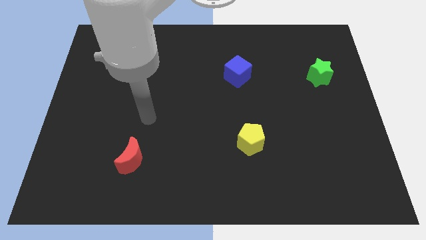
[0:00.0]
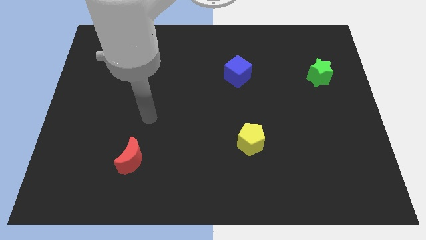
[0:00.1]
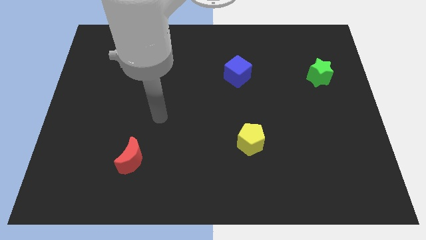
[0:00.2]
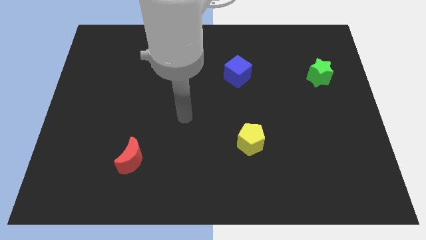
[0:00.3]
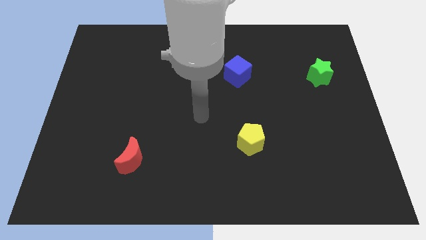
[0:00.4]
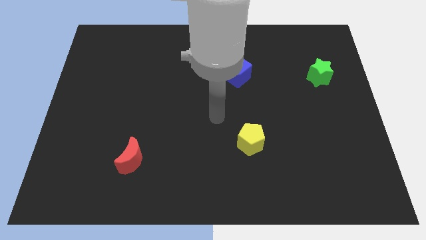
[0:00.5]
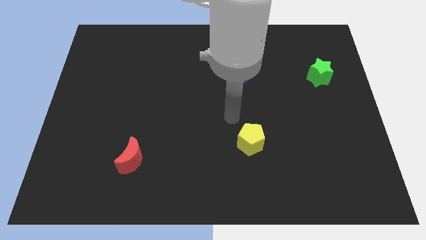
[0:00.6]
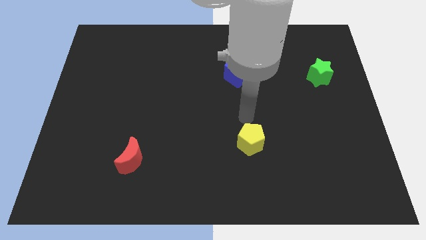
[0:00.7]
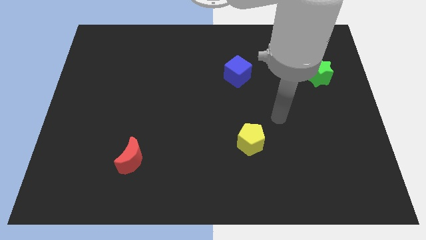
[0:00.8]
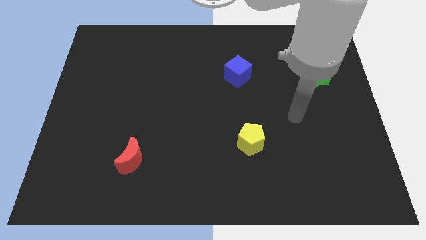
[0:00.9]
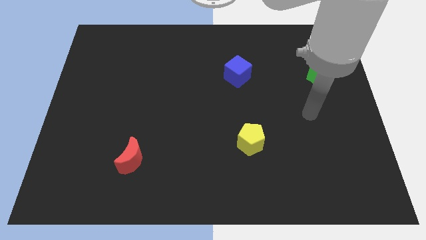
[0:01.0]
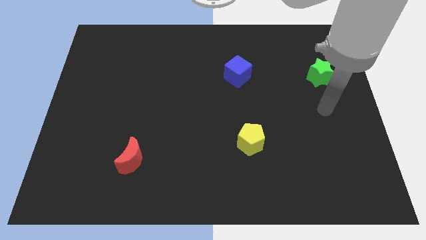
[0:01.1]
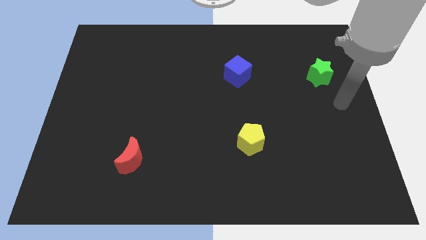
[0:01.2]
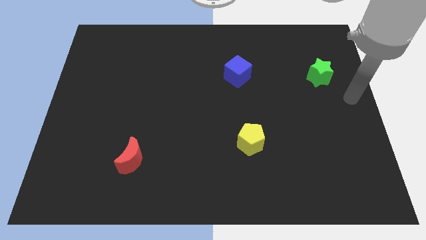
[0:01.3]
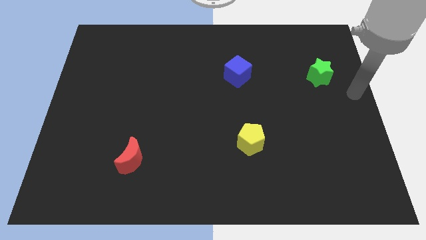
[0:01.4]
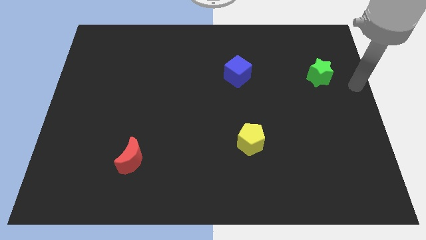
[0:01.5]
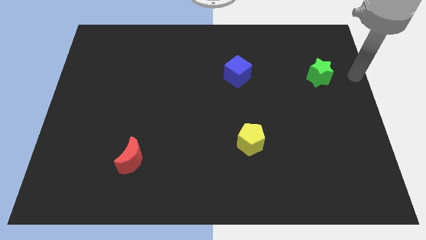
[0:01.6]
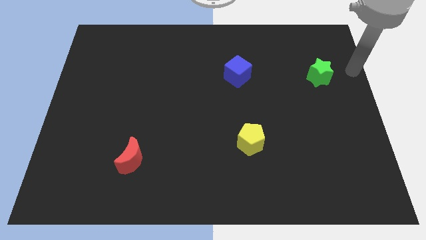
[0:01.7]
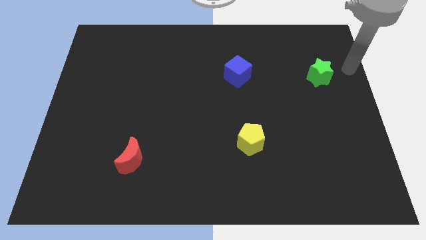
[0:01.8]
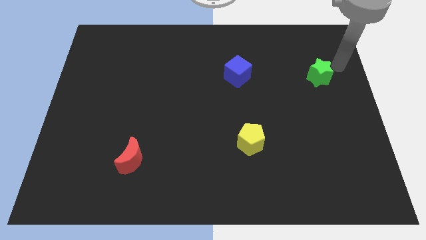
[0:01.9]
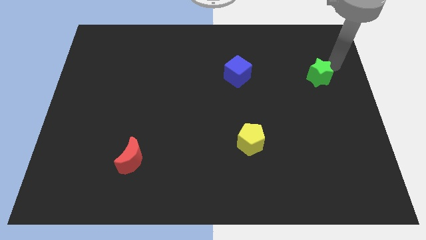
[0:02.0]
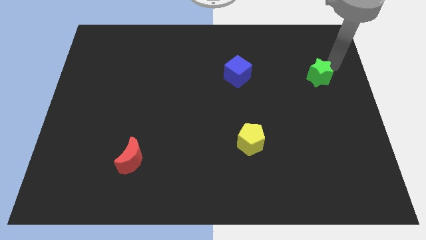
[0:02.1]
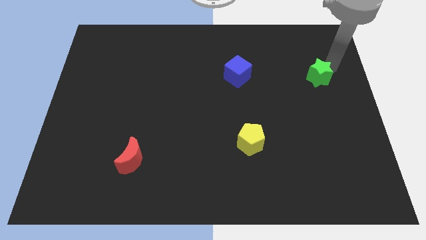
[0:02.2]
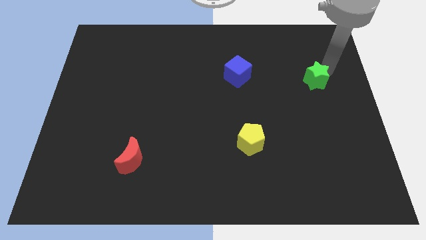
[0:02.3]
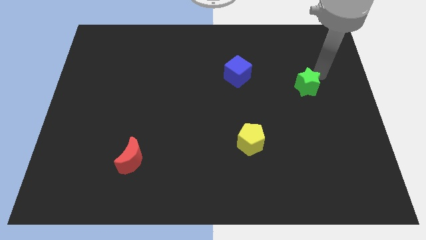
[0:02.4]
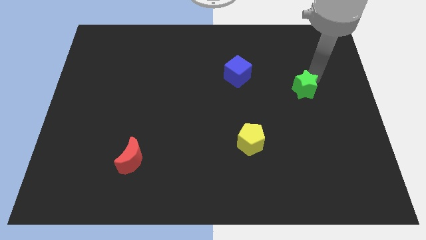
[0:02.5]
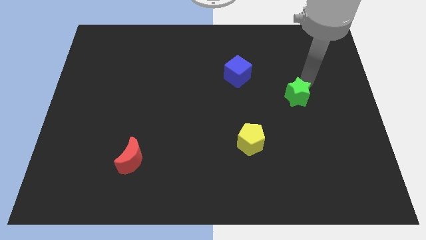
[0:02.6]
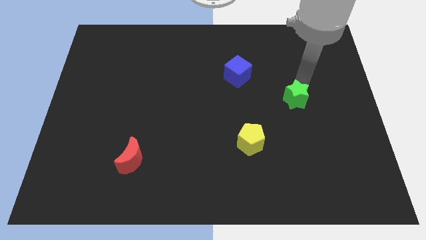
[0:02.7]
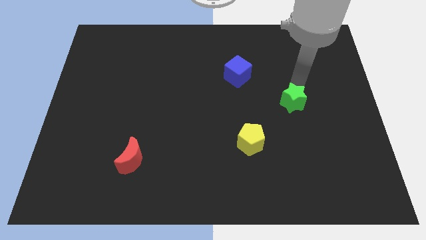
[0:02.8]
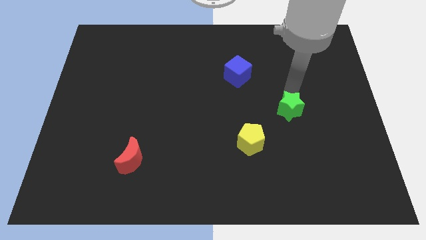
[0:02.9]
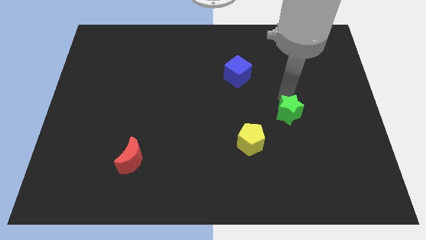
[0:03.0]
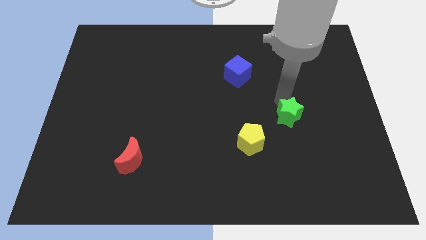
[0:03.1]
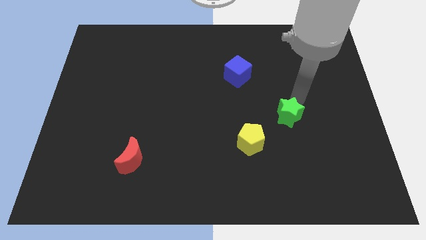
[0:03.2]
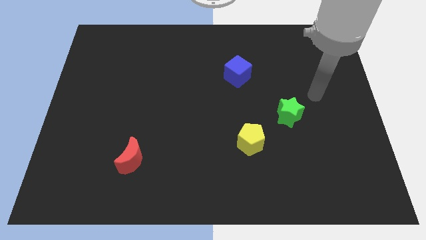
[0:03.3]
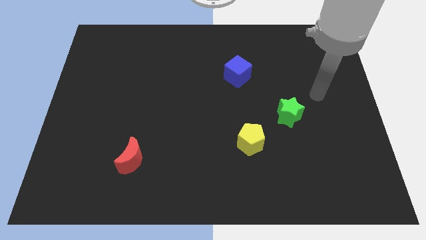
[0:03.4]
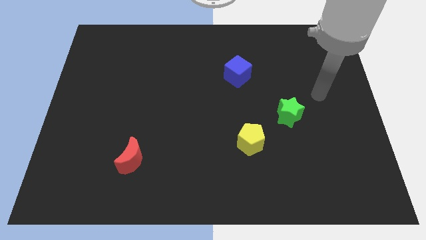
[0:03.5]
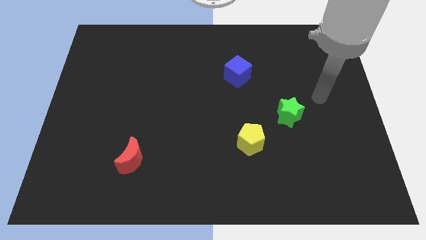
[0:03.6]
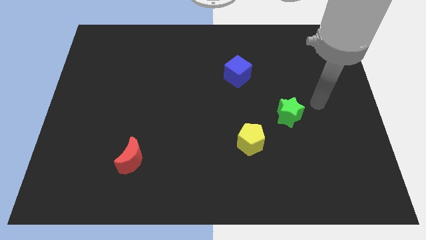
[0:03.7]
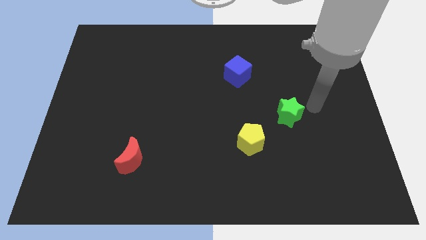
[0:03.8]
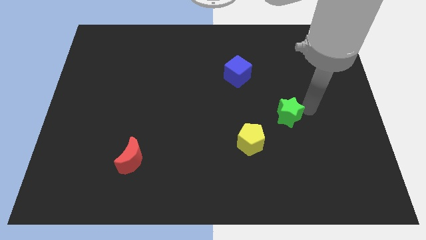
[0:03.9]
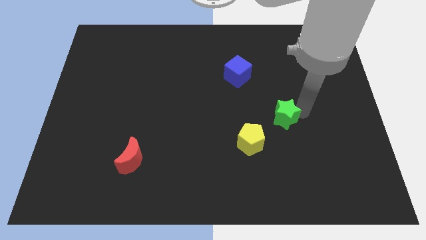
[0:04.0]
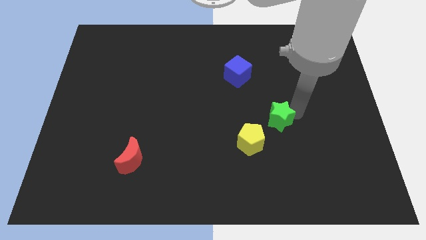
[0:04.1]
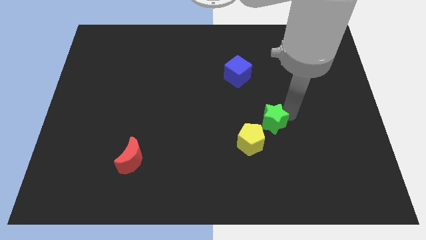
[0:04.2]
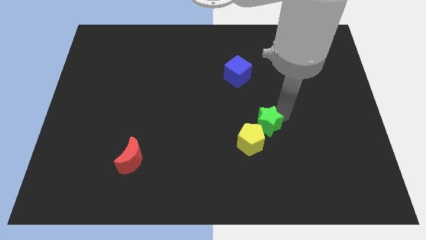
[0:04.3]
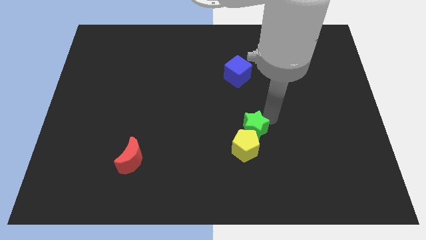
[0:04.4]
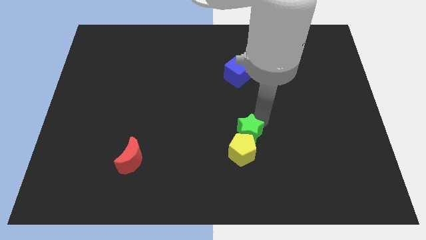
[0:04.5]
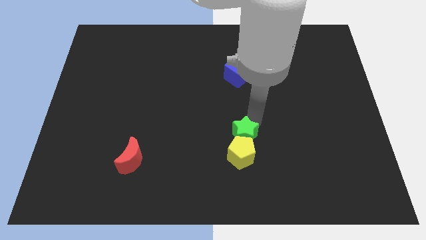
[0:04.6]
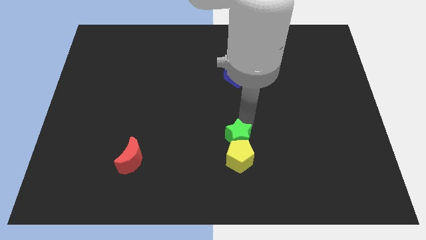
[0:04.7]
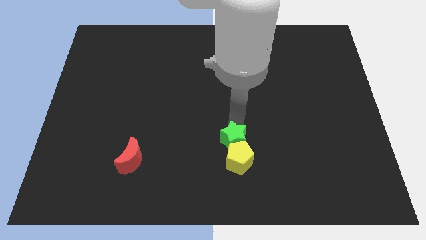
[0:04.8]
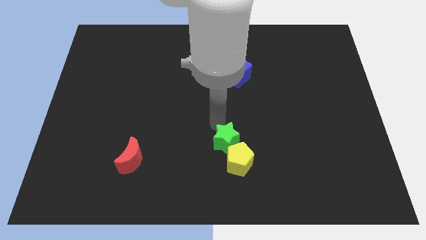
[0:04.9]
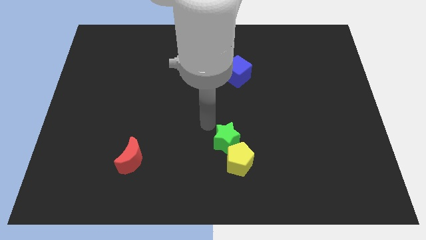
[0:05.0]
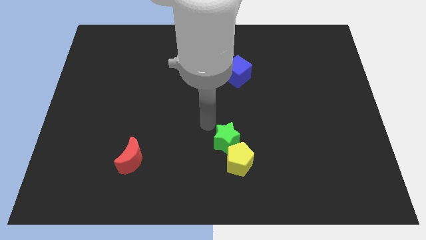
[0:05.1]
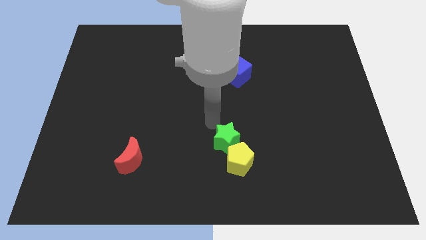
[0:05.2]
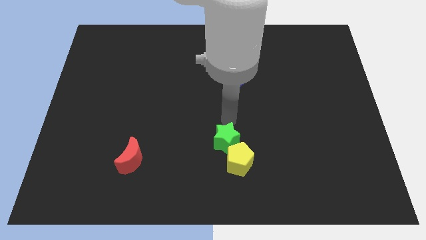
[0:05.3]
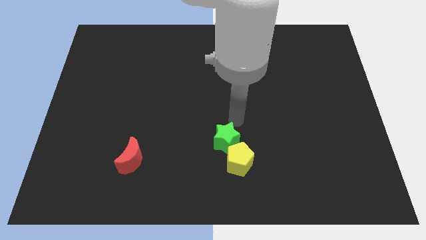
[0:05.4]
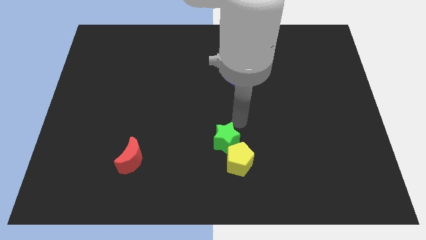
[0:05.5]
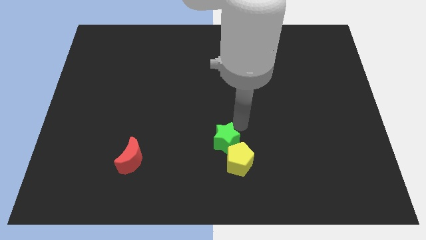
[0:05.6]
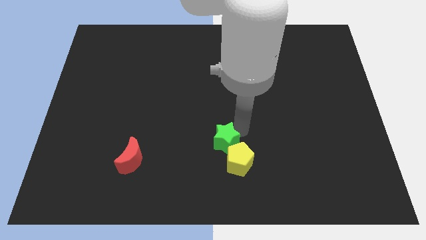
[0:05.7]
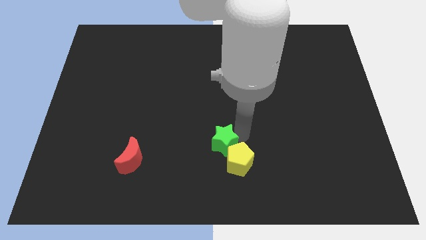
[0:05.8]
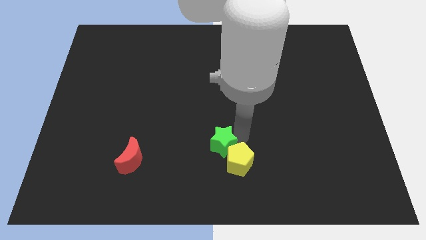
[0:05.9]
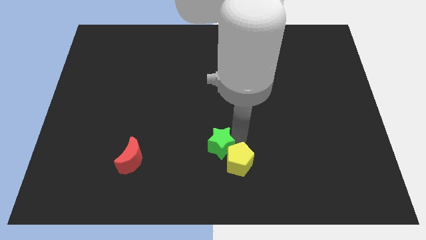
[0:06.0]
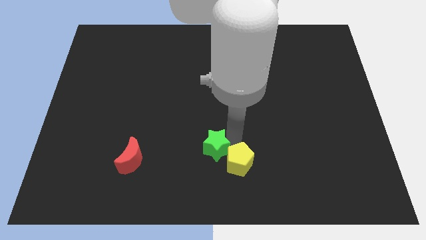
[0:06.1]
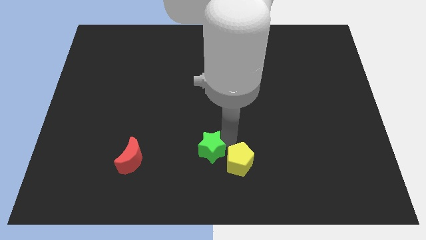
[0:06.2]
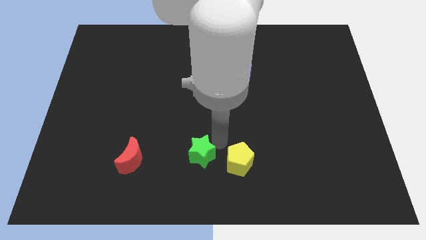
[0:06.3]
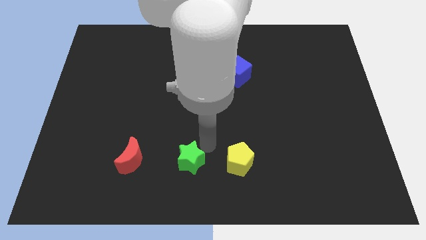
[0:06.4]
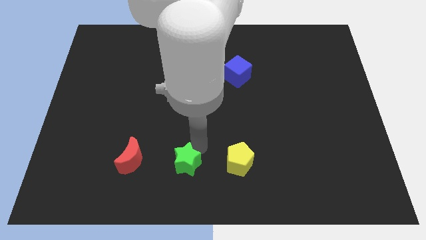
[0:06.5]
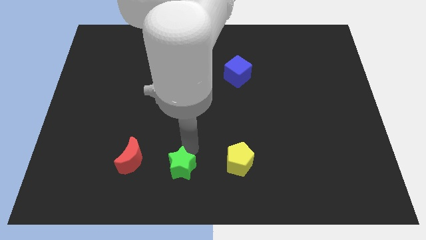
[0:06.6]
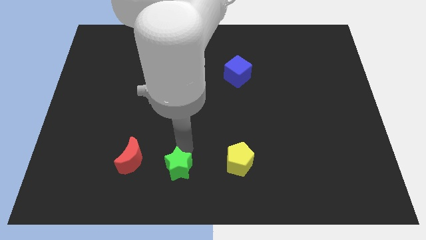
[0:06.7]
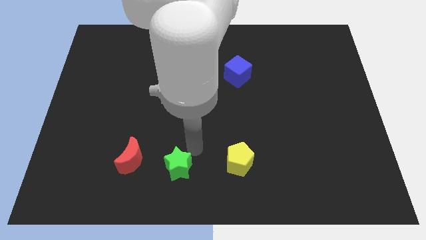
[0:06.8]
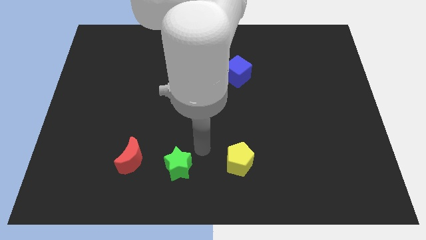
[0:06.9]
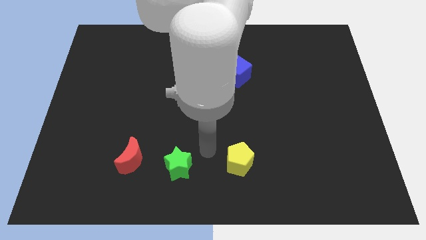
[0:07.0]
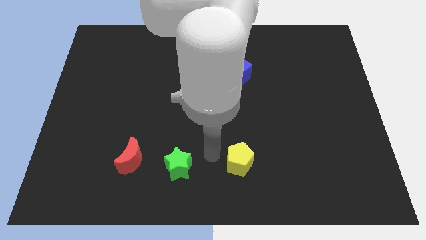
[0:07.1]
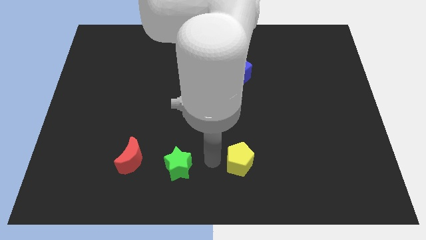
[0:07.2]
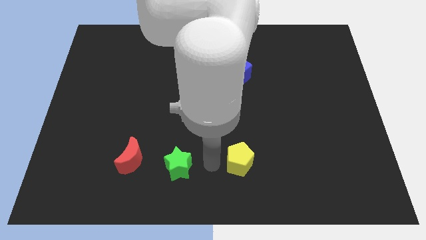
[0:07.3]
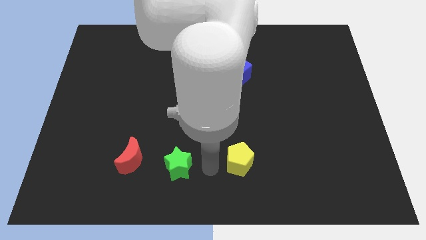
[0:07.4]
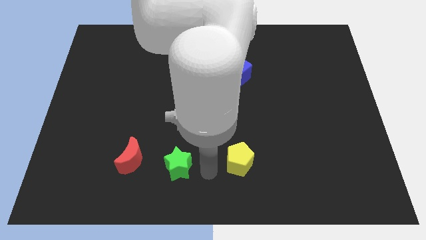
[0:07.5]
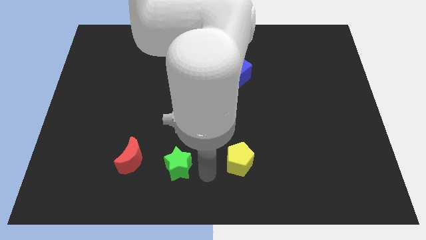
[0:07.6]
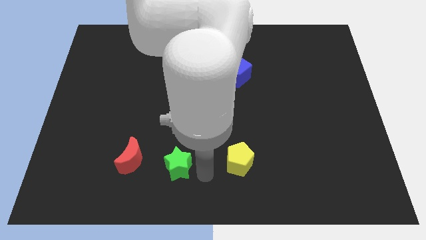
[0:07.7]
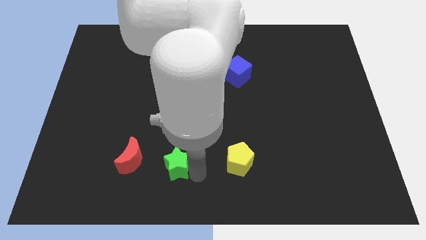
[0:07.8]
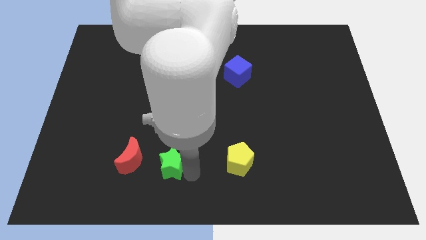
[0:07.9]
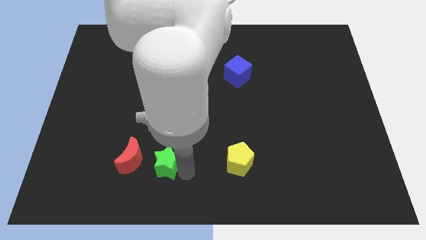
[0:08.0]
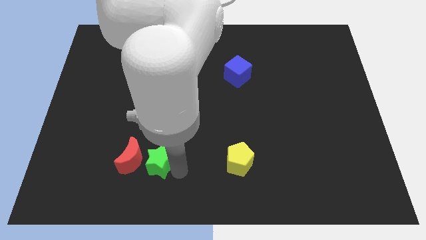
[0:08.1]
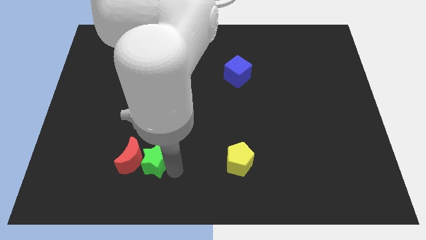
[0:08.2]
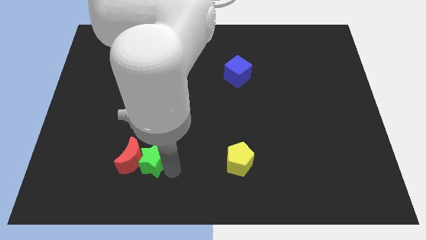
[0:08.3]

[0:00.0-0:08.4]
slide the star towards the red block

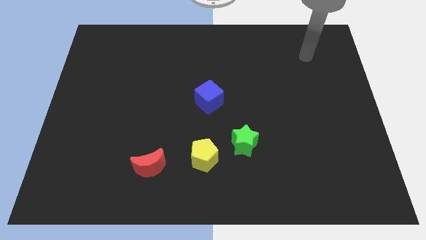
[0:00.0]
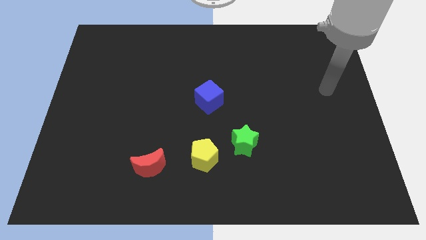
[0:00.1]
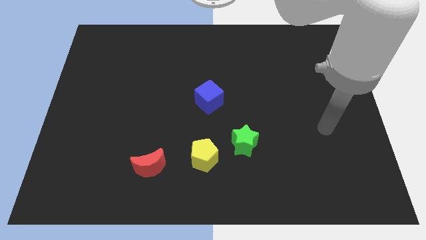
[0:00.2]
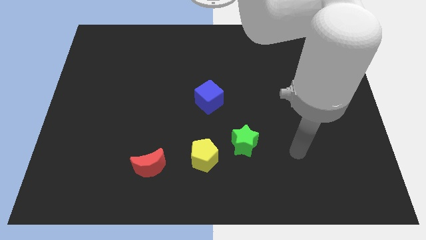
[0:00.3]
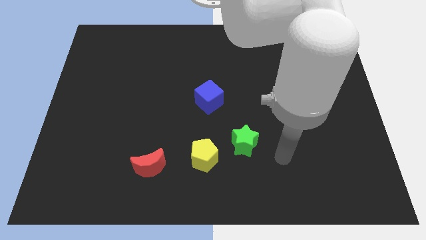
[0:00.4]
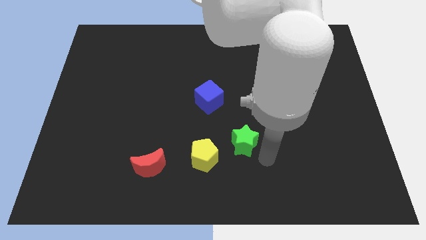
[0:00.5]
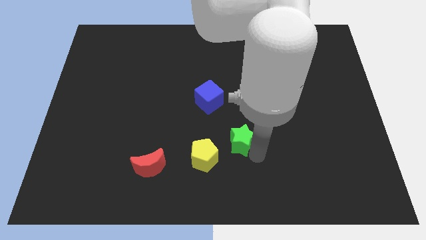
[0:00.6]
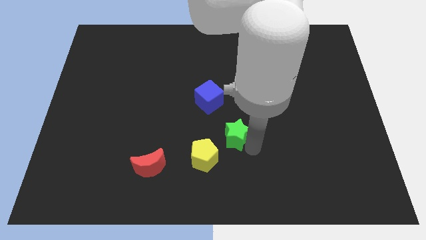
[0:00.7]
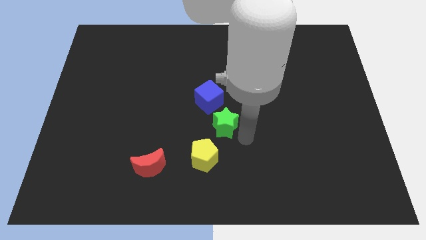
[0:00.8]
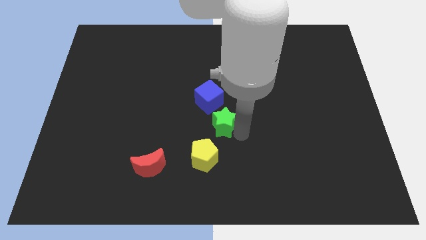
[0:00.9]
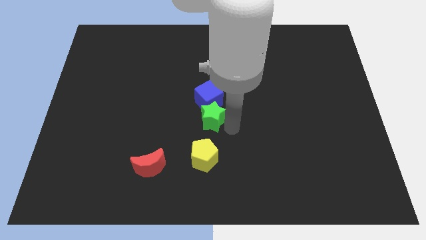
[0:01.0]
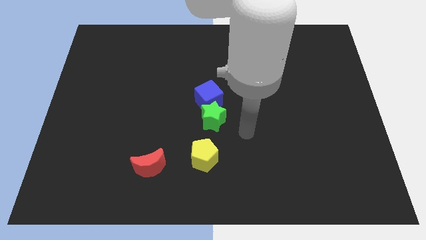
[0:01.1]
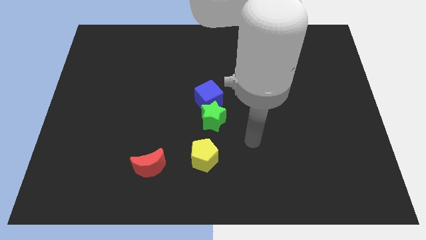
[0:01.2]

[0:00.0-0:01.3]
push the green star towards the blue cube
